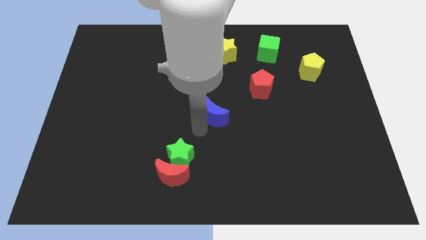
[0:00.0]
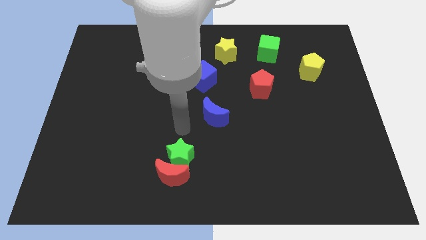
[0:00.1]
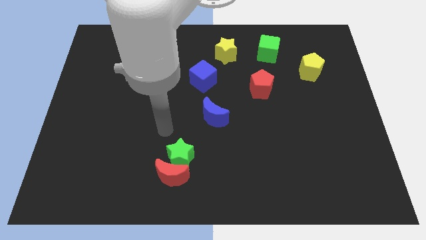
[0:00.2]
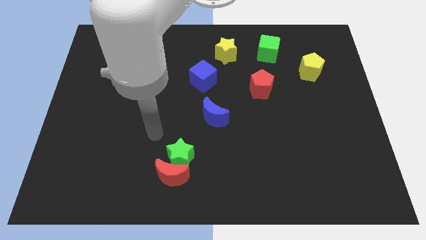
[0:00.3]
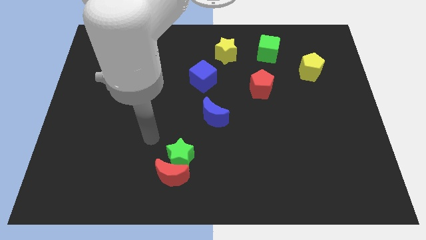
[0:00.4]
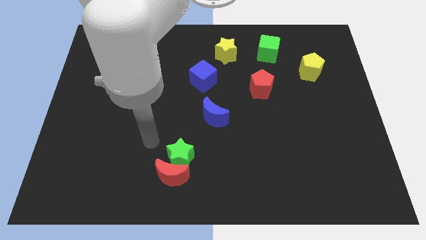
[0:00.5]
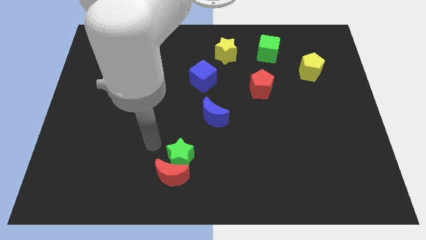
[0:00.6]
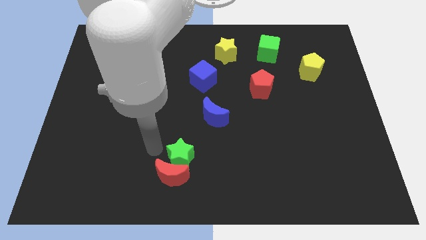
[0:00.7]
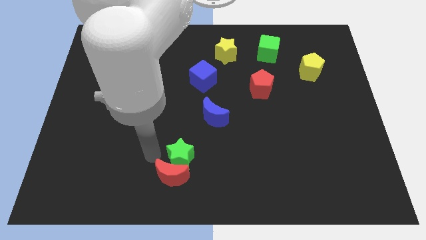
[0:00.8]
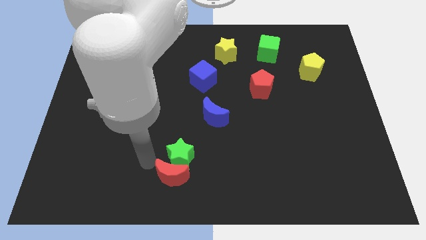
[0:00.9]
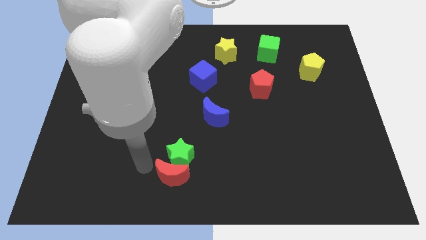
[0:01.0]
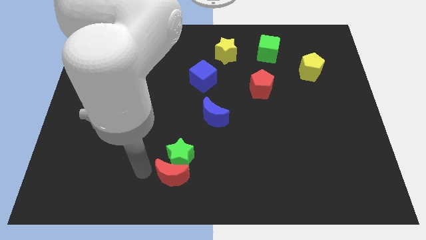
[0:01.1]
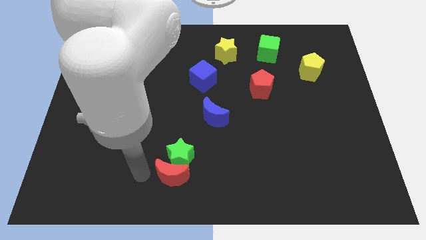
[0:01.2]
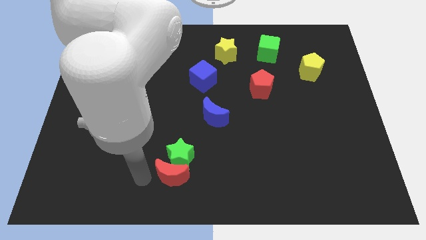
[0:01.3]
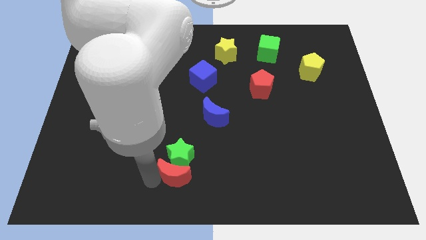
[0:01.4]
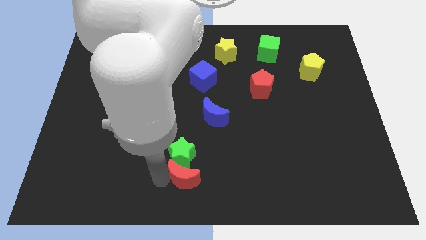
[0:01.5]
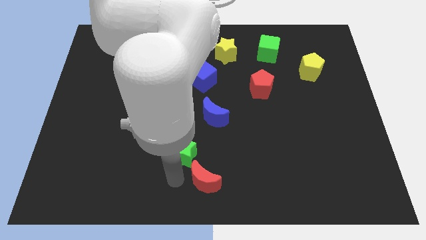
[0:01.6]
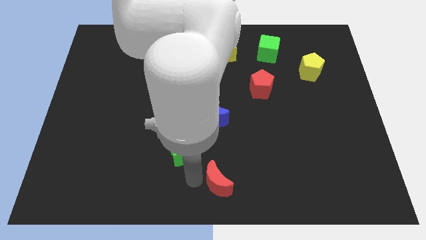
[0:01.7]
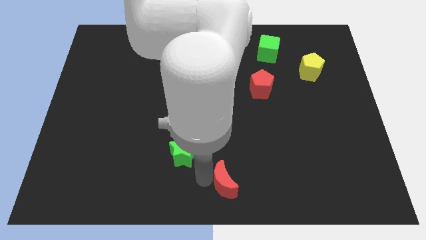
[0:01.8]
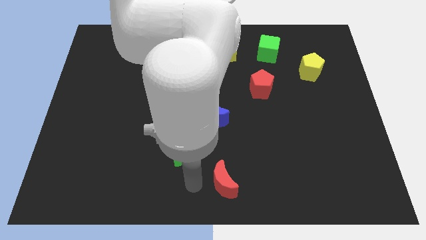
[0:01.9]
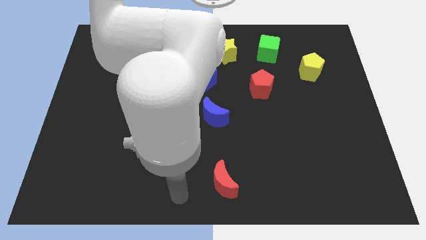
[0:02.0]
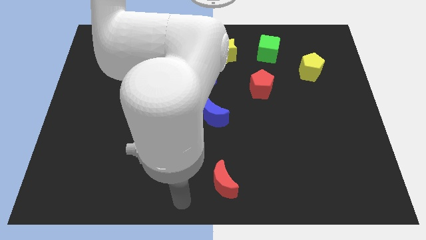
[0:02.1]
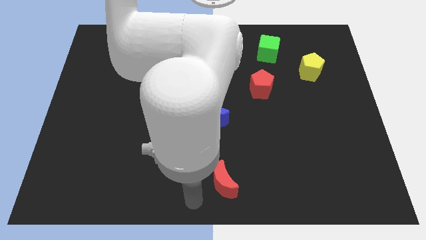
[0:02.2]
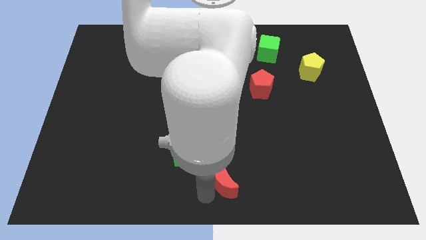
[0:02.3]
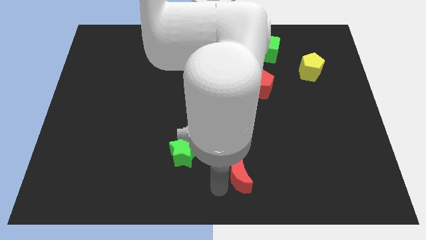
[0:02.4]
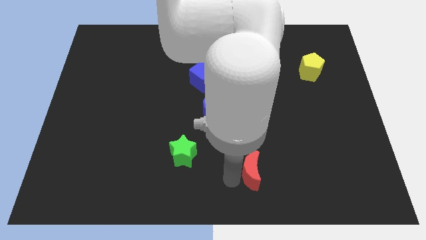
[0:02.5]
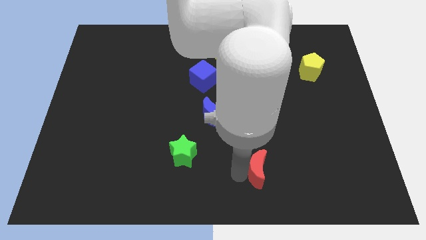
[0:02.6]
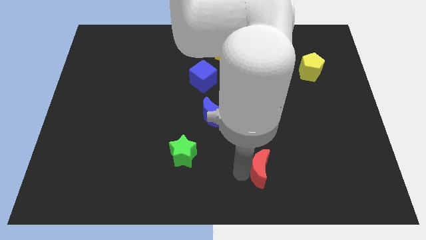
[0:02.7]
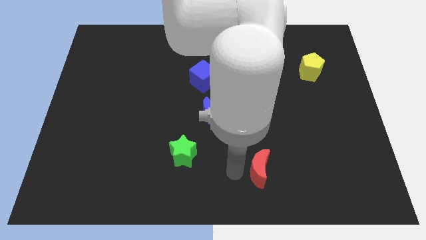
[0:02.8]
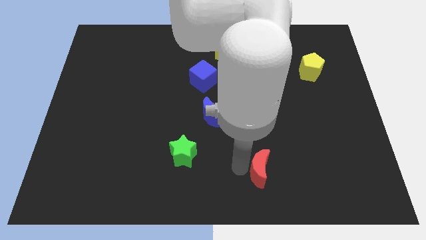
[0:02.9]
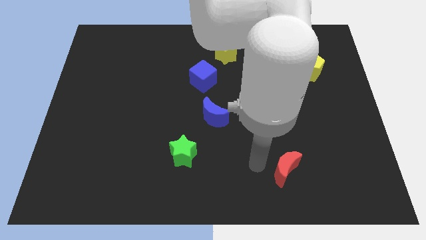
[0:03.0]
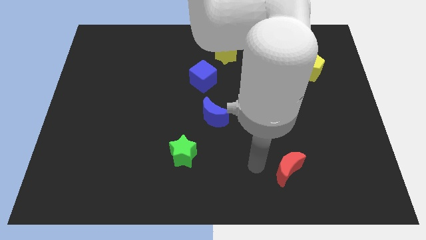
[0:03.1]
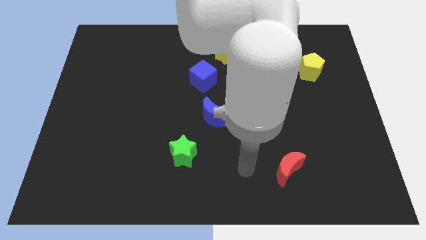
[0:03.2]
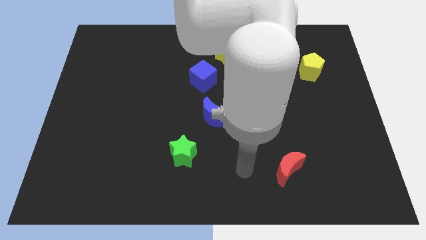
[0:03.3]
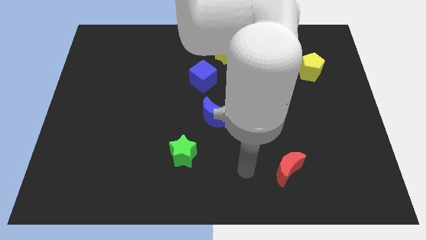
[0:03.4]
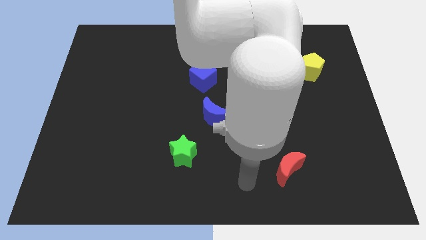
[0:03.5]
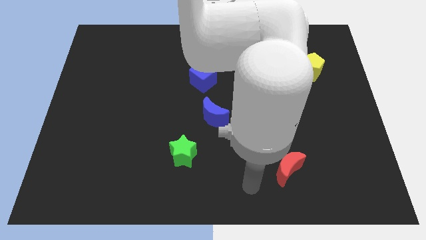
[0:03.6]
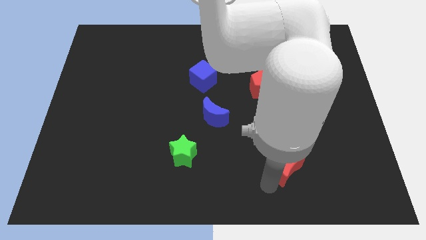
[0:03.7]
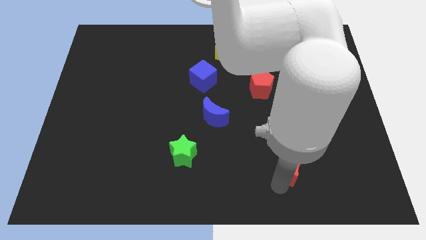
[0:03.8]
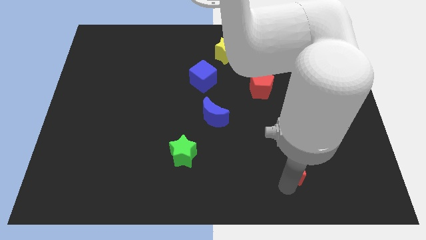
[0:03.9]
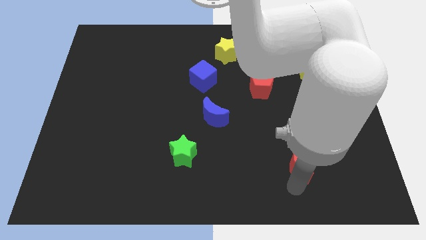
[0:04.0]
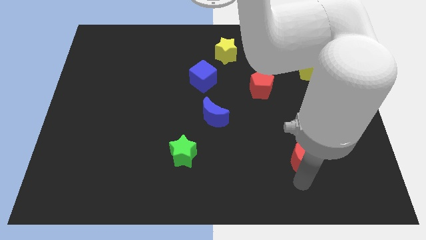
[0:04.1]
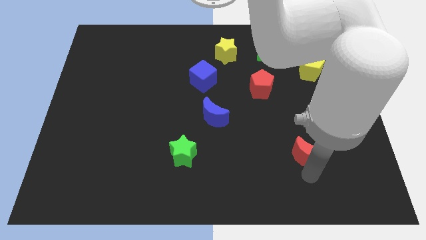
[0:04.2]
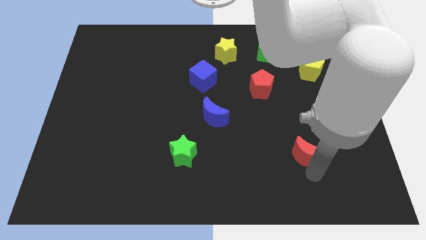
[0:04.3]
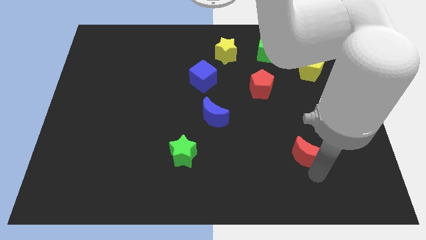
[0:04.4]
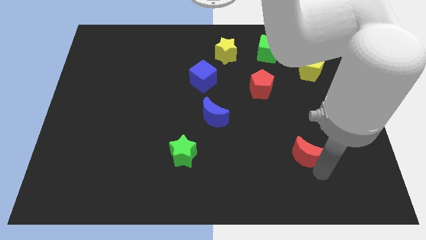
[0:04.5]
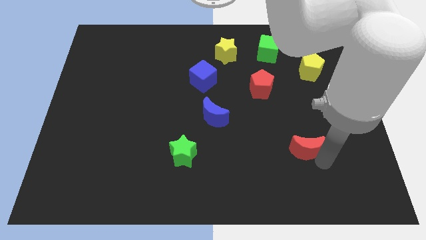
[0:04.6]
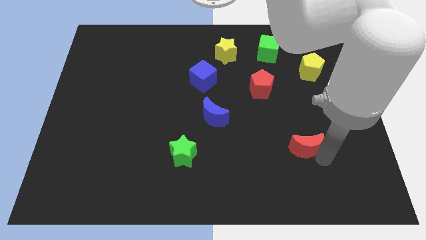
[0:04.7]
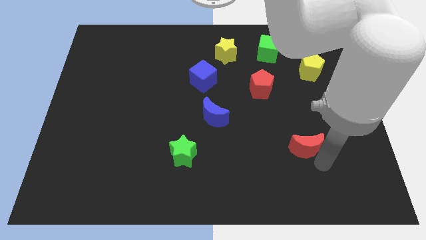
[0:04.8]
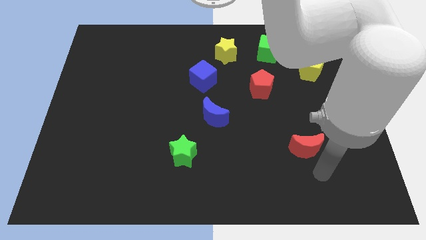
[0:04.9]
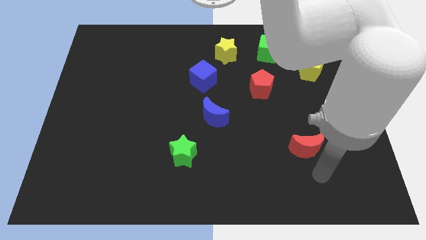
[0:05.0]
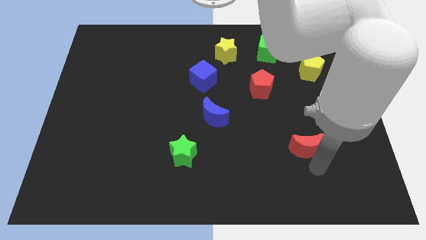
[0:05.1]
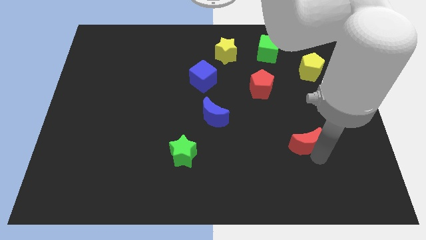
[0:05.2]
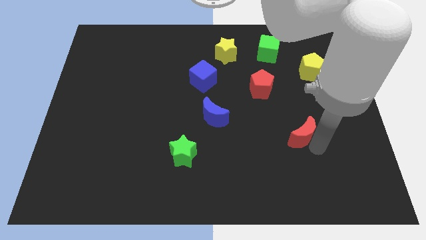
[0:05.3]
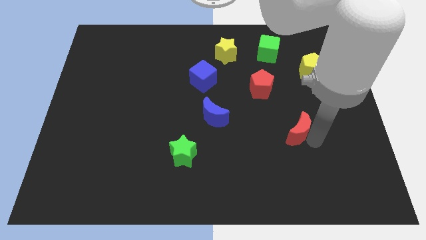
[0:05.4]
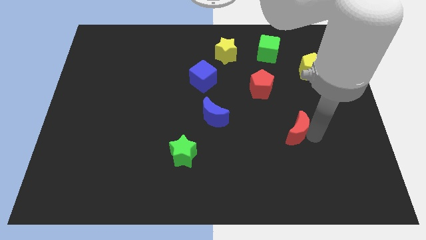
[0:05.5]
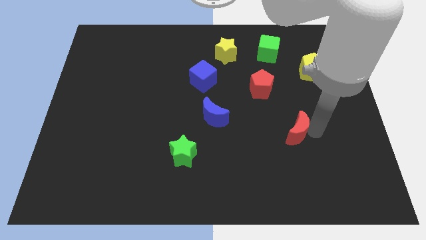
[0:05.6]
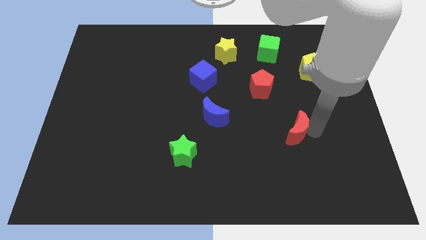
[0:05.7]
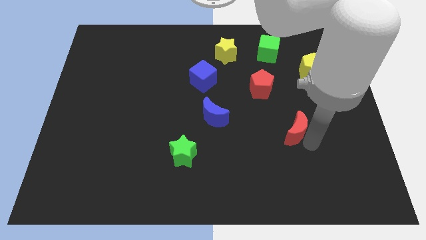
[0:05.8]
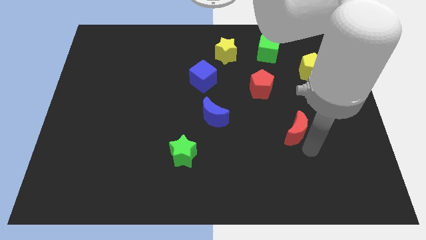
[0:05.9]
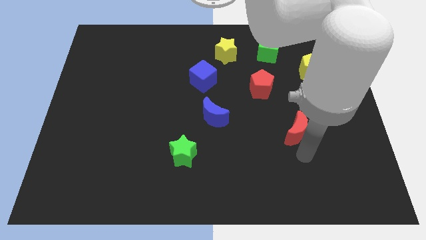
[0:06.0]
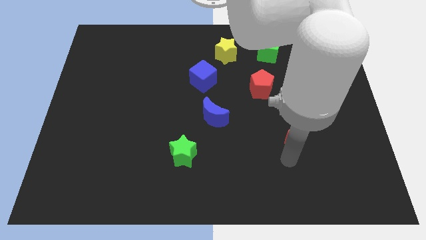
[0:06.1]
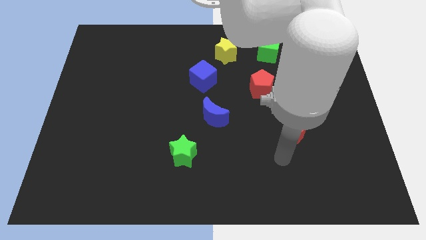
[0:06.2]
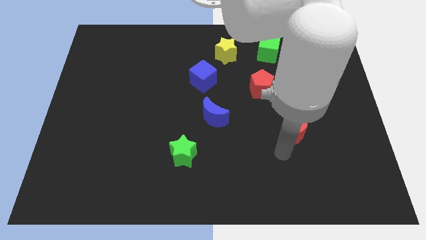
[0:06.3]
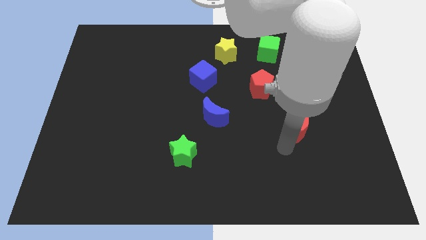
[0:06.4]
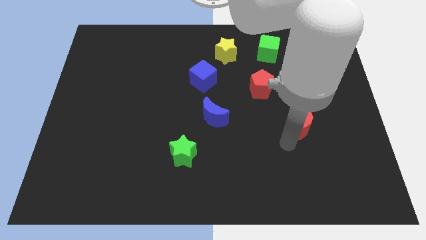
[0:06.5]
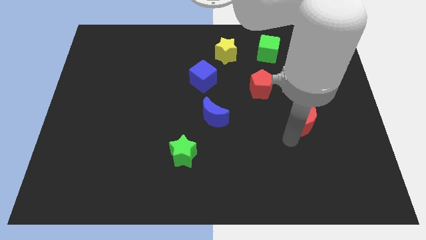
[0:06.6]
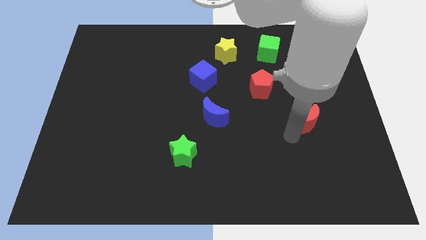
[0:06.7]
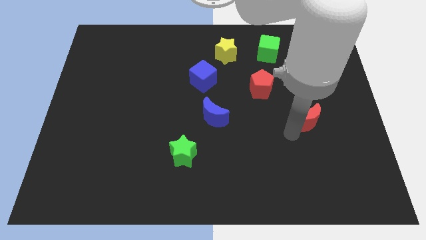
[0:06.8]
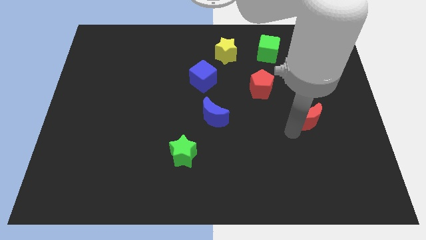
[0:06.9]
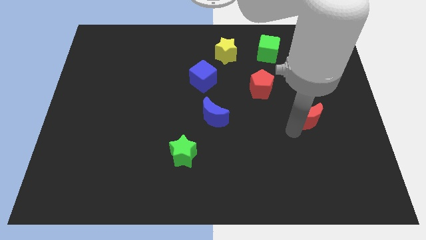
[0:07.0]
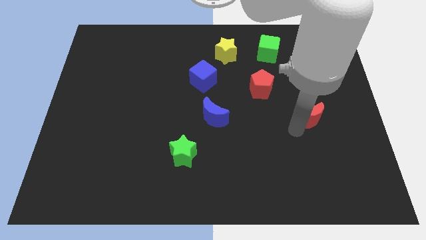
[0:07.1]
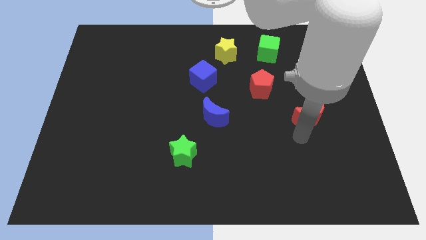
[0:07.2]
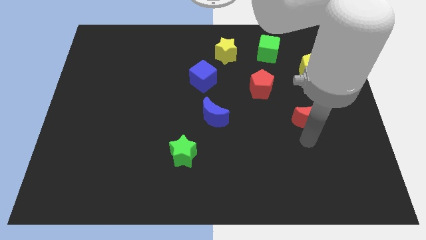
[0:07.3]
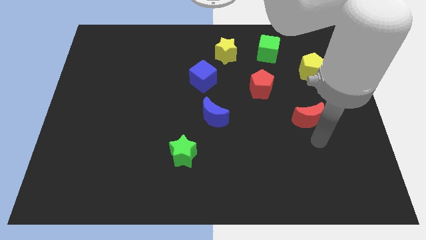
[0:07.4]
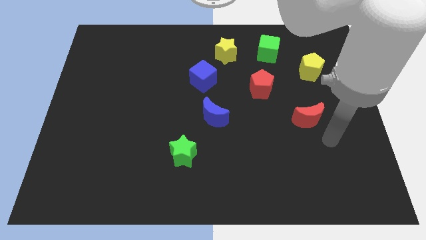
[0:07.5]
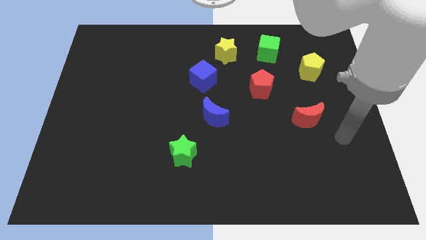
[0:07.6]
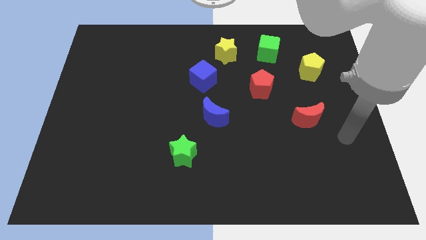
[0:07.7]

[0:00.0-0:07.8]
move the red crescent to the right of the blue crescent

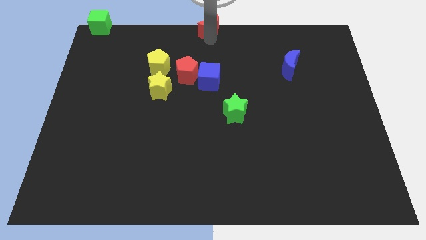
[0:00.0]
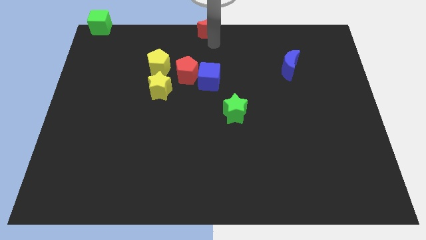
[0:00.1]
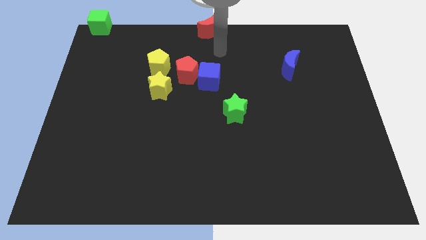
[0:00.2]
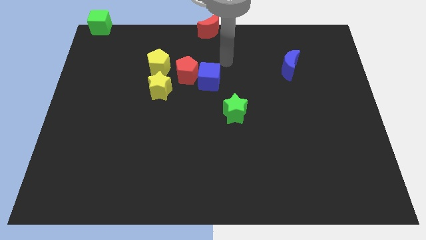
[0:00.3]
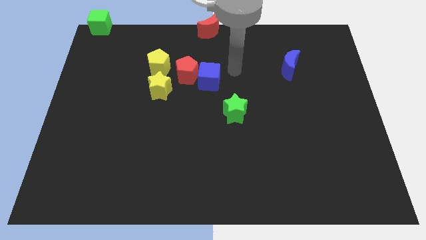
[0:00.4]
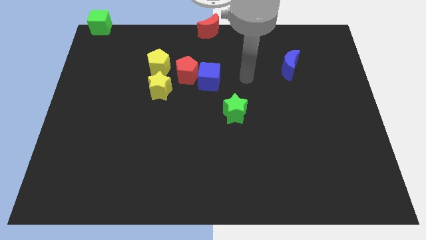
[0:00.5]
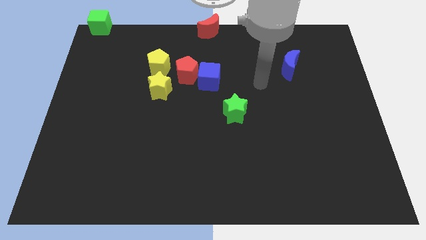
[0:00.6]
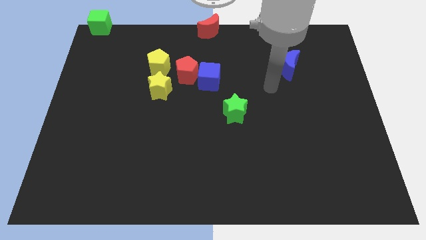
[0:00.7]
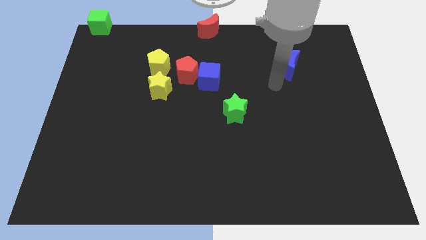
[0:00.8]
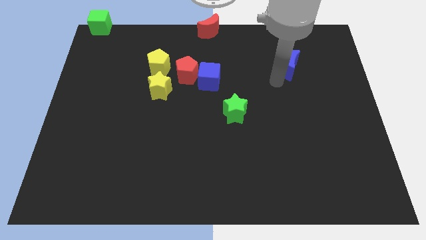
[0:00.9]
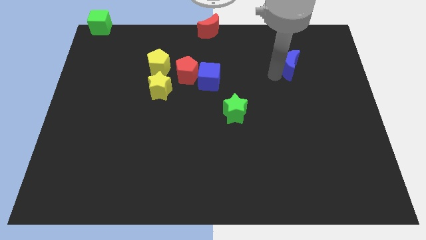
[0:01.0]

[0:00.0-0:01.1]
point your arm to the left side of blue moon

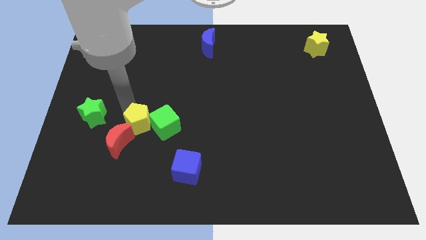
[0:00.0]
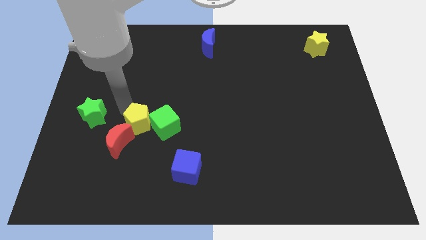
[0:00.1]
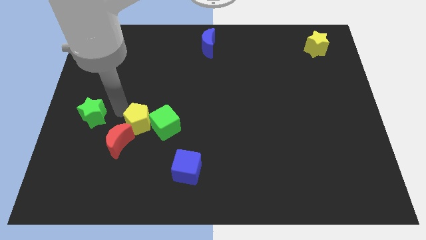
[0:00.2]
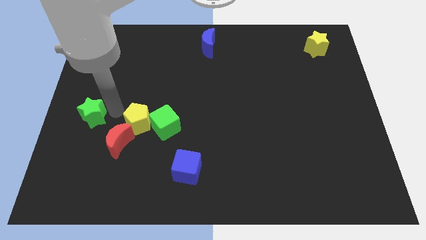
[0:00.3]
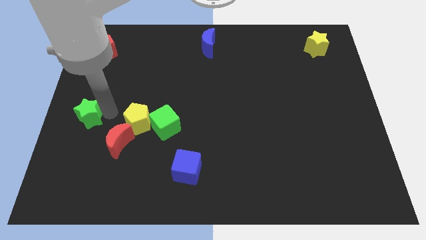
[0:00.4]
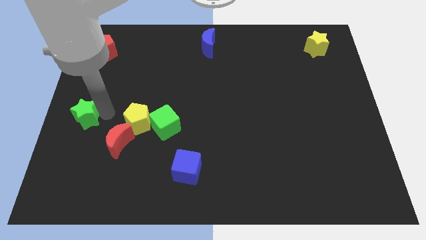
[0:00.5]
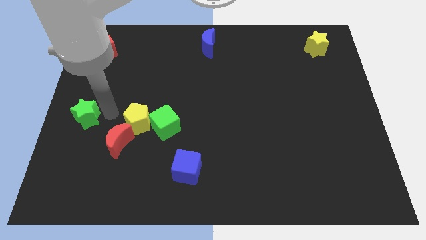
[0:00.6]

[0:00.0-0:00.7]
place green star on the left center of the board
